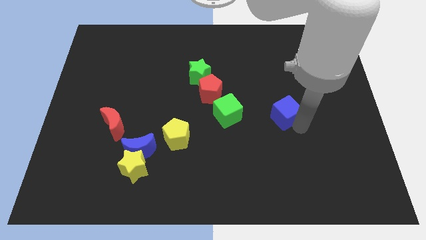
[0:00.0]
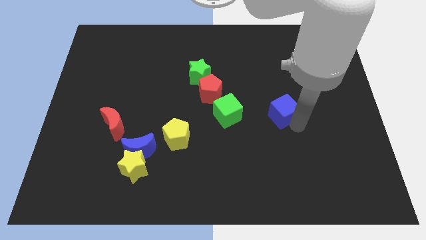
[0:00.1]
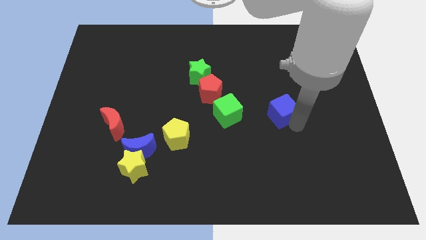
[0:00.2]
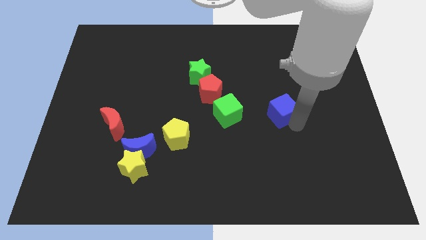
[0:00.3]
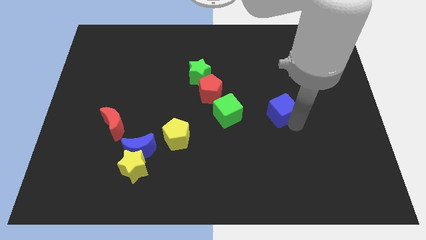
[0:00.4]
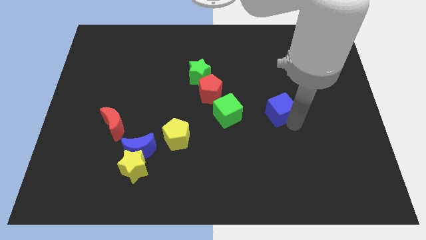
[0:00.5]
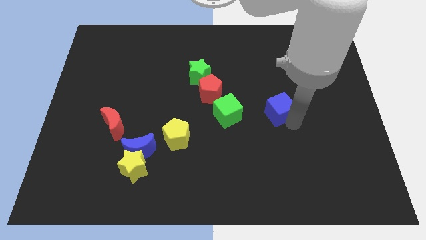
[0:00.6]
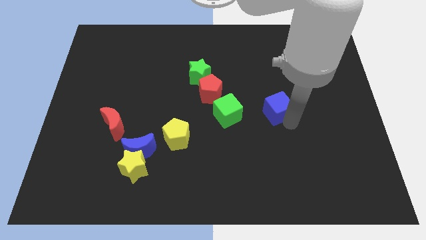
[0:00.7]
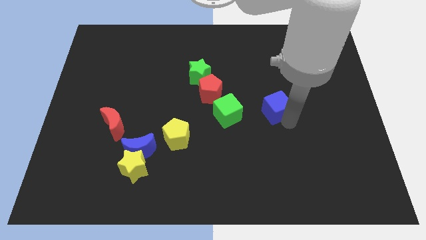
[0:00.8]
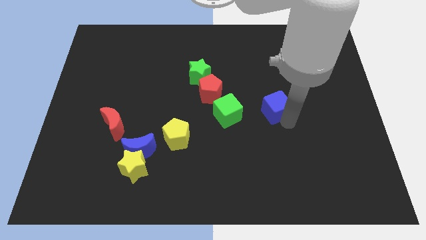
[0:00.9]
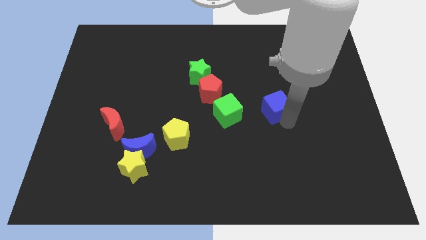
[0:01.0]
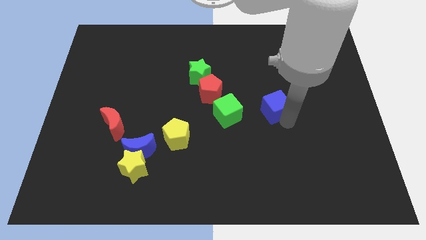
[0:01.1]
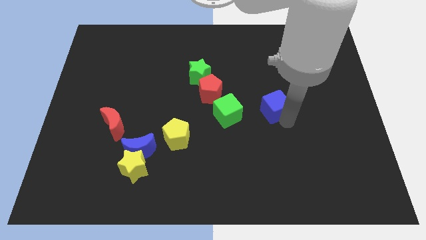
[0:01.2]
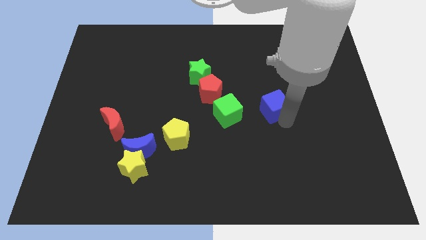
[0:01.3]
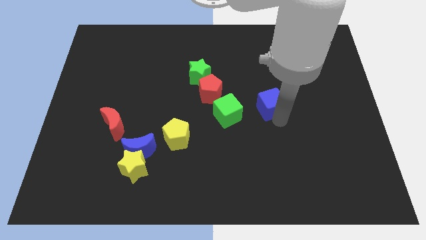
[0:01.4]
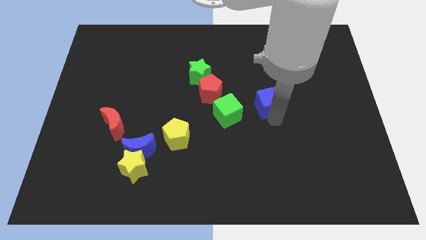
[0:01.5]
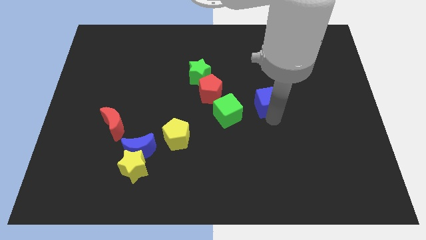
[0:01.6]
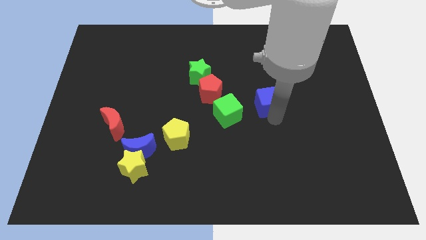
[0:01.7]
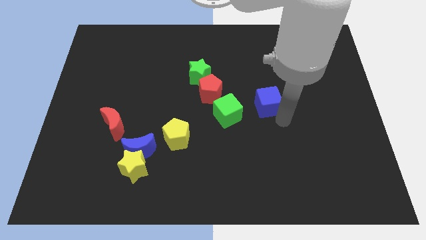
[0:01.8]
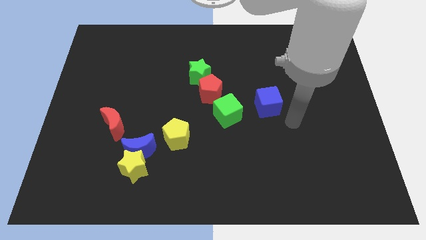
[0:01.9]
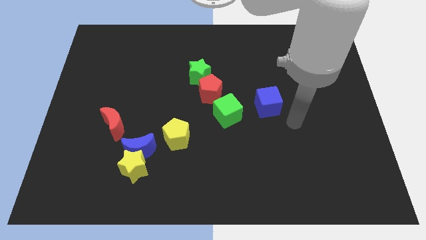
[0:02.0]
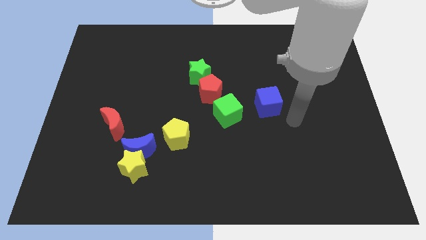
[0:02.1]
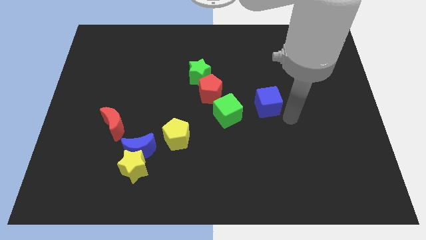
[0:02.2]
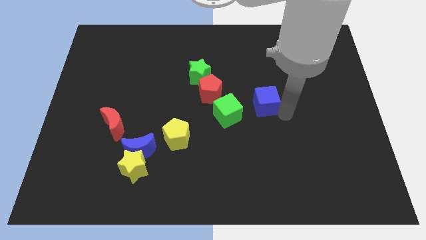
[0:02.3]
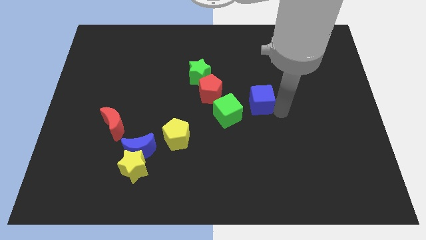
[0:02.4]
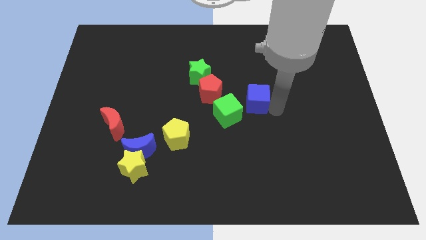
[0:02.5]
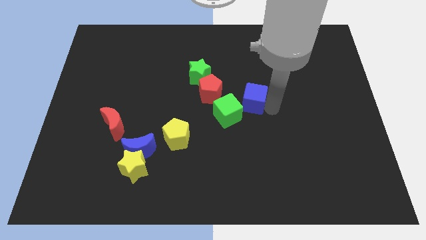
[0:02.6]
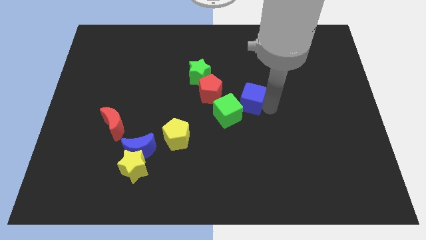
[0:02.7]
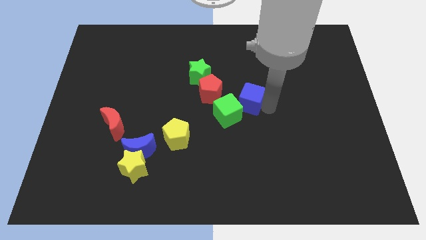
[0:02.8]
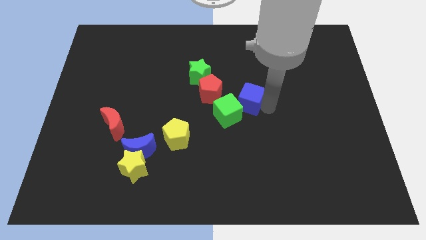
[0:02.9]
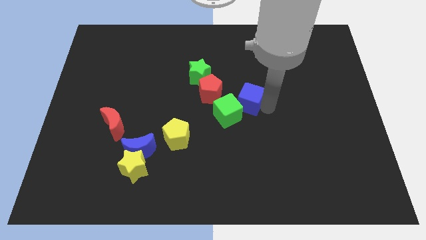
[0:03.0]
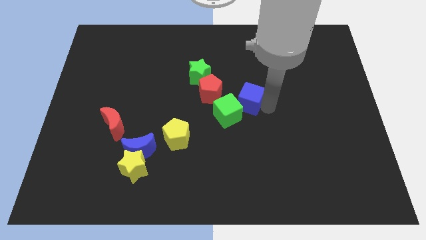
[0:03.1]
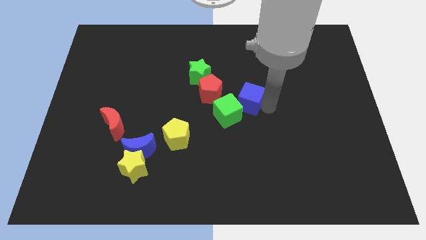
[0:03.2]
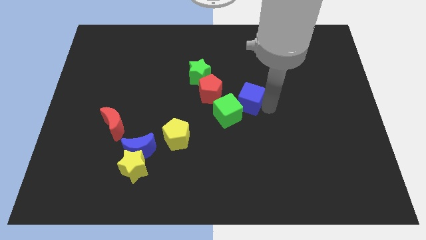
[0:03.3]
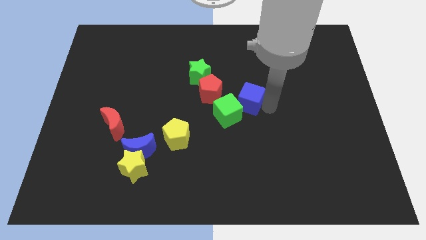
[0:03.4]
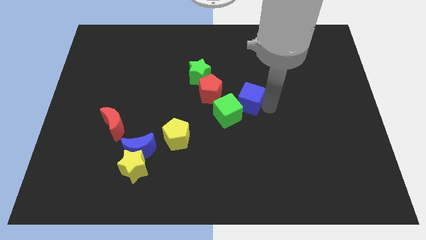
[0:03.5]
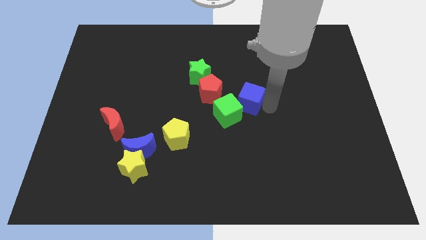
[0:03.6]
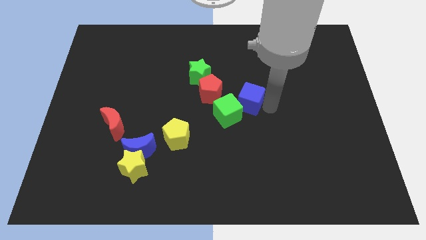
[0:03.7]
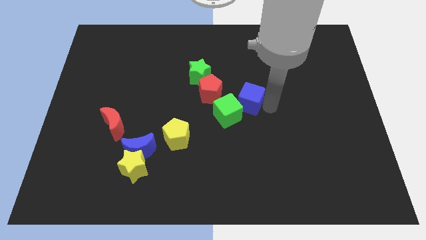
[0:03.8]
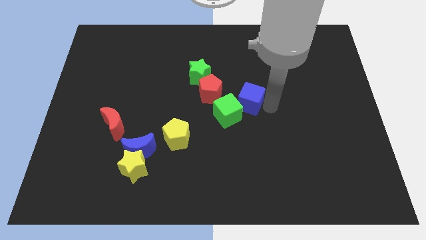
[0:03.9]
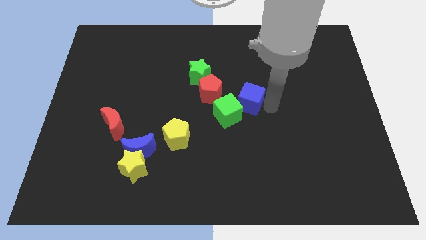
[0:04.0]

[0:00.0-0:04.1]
push the blue cube close to the green cube

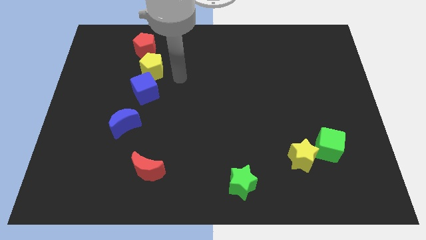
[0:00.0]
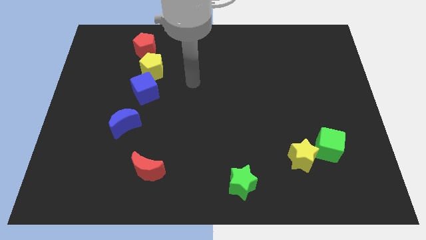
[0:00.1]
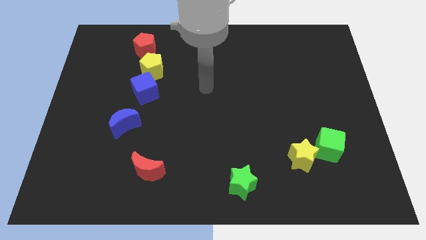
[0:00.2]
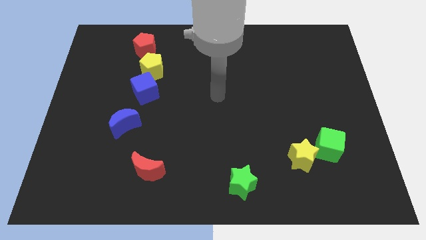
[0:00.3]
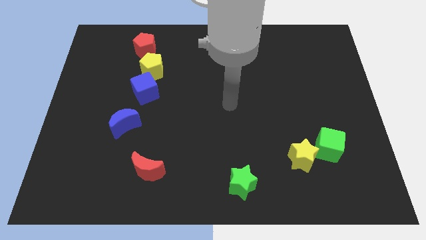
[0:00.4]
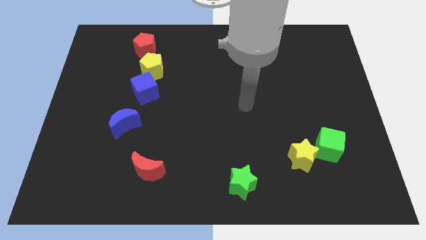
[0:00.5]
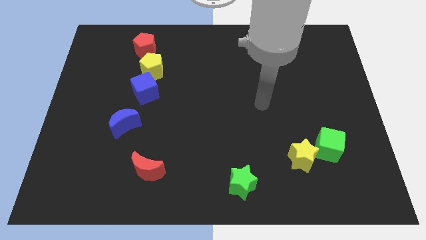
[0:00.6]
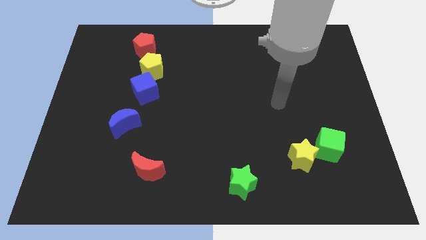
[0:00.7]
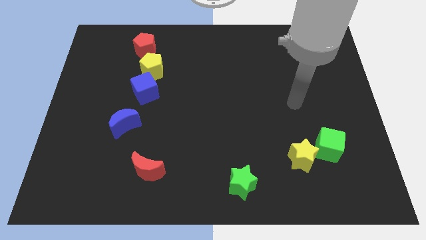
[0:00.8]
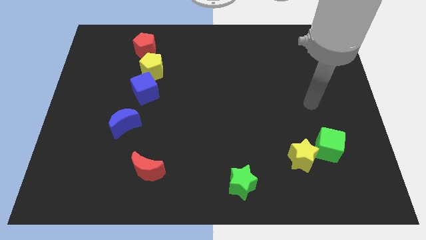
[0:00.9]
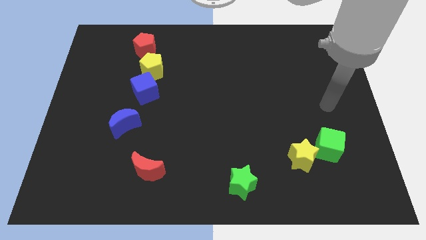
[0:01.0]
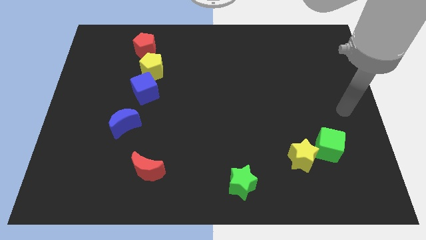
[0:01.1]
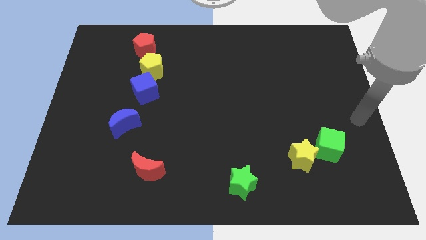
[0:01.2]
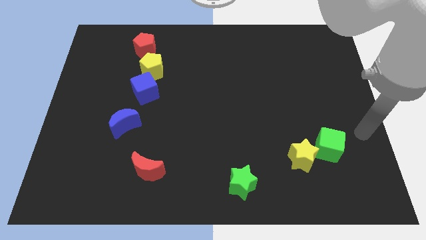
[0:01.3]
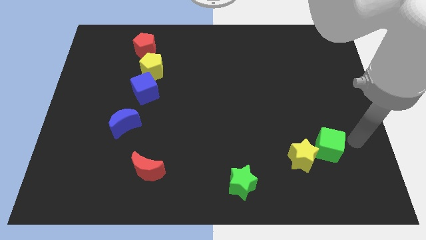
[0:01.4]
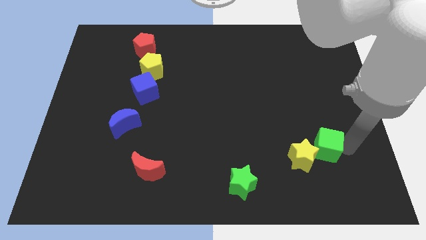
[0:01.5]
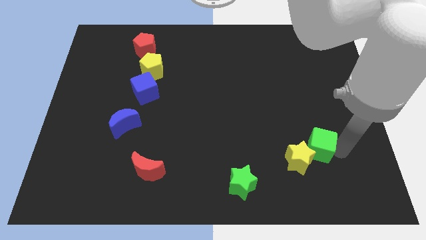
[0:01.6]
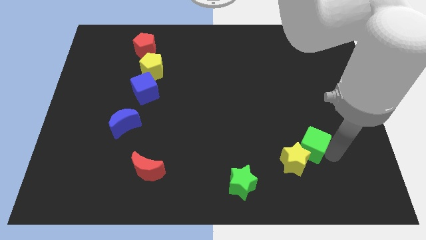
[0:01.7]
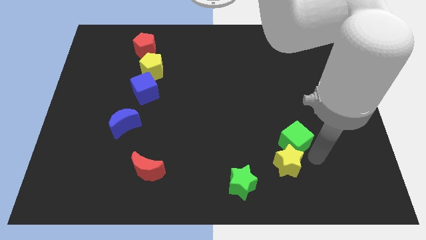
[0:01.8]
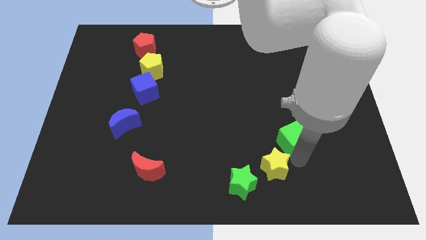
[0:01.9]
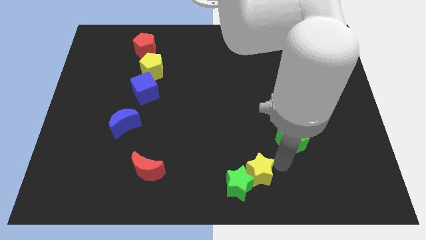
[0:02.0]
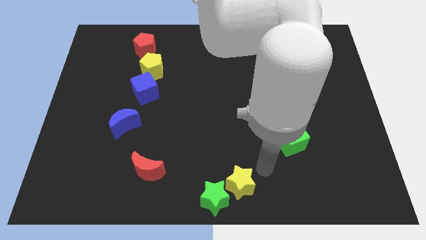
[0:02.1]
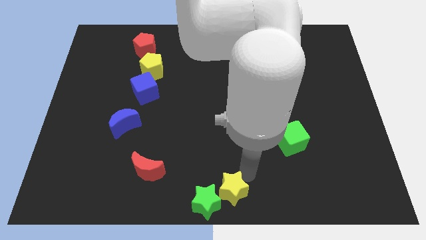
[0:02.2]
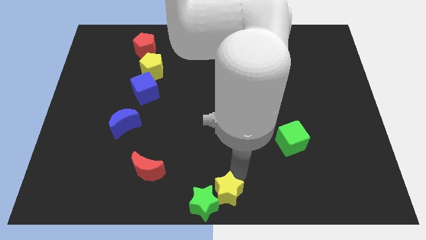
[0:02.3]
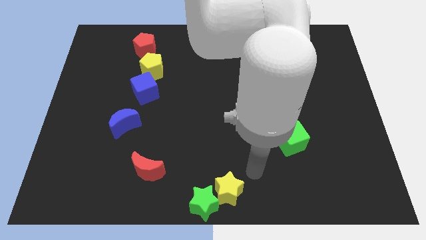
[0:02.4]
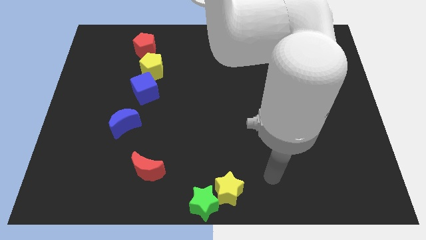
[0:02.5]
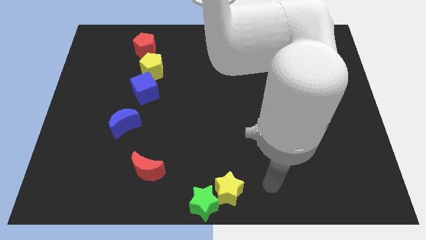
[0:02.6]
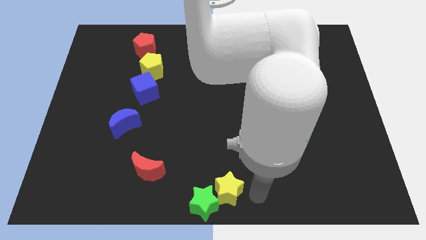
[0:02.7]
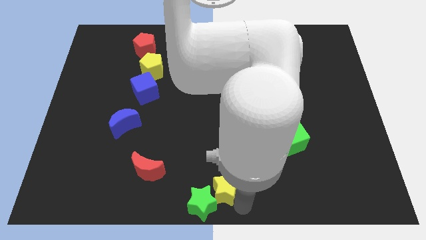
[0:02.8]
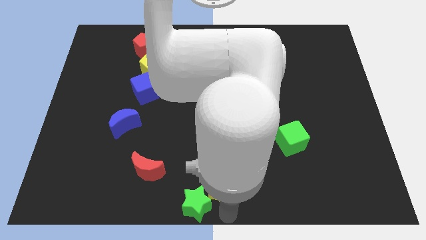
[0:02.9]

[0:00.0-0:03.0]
push the yellow star and the green star at the bottom center of the board

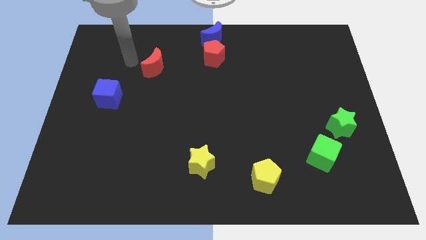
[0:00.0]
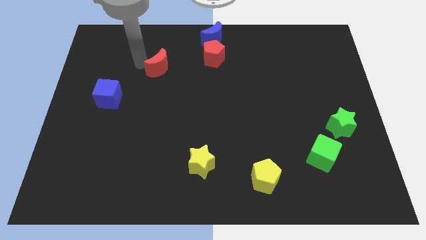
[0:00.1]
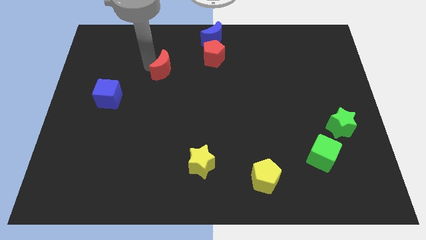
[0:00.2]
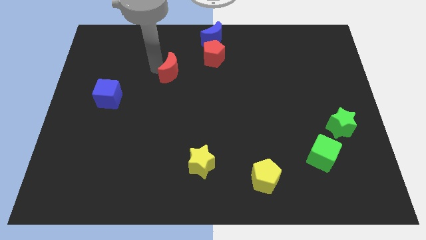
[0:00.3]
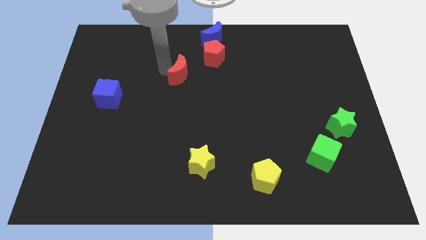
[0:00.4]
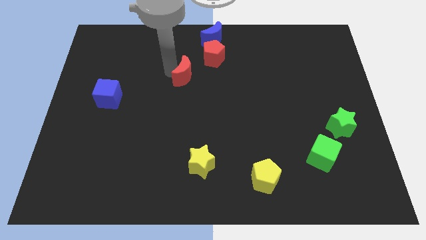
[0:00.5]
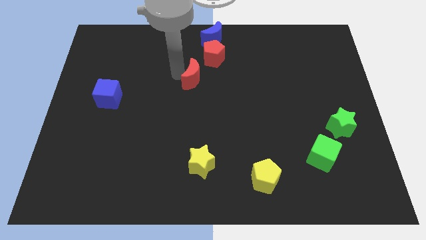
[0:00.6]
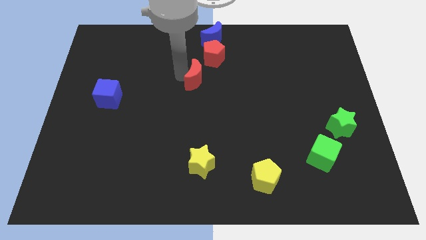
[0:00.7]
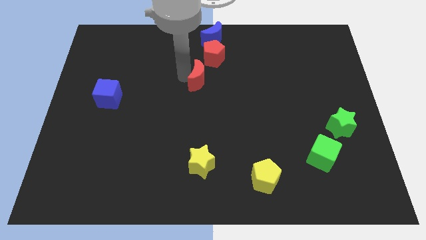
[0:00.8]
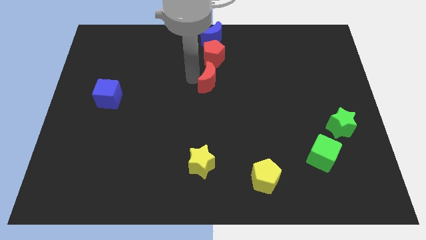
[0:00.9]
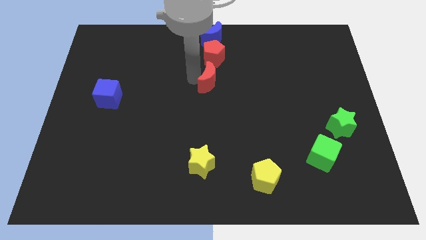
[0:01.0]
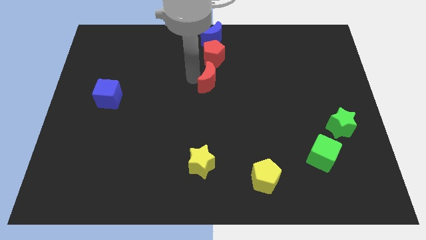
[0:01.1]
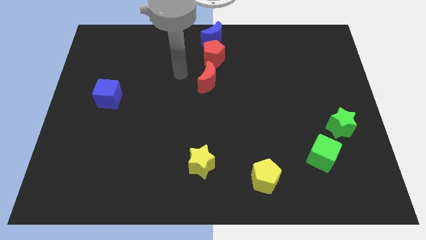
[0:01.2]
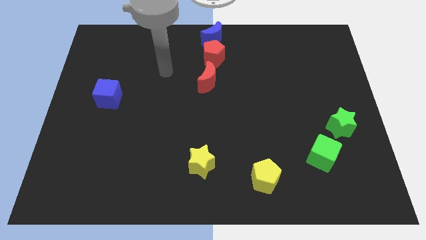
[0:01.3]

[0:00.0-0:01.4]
place the red moon below the red pentagon

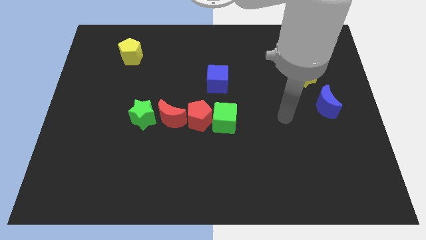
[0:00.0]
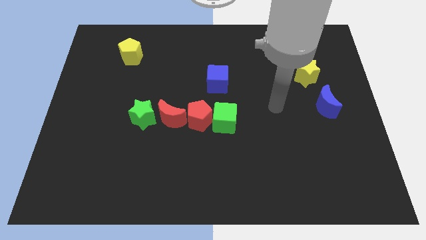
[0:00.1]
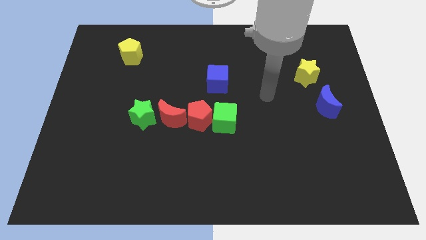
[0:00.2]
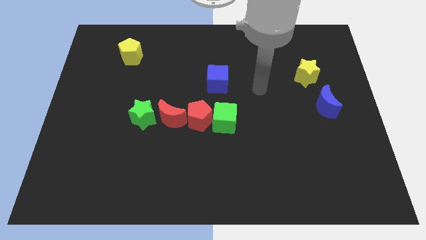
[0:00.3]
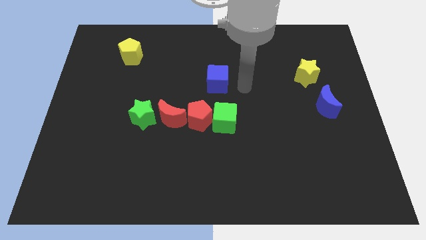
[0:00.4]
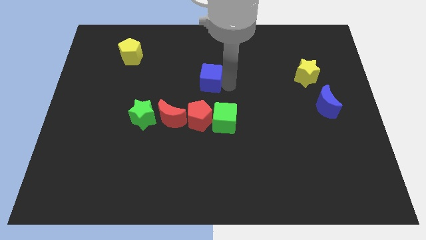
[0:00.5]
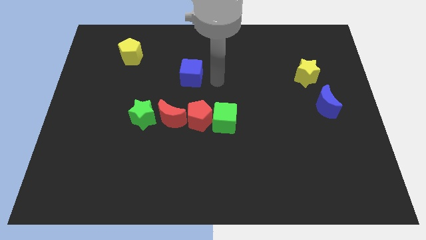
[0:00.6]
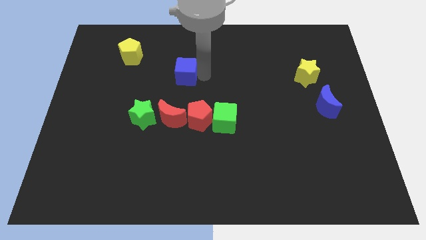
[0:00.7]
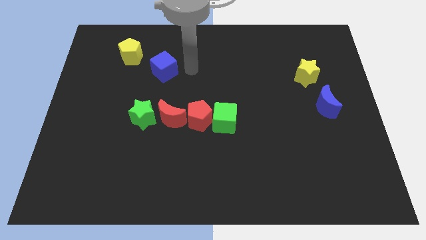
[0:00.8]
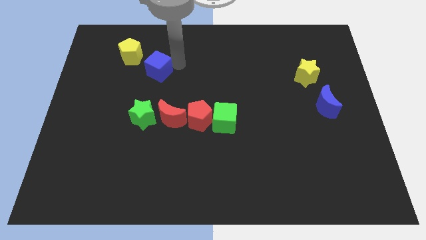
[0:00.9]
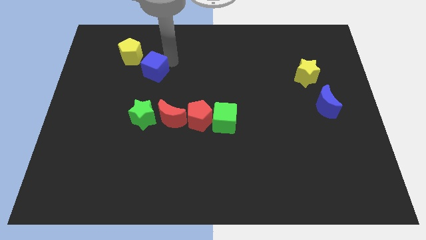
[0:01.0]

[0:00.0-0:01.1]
place the blue cube above the red moon
